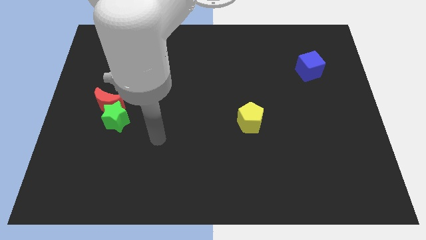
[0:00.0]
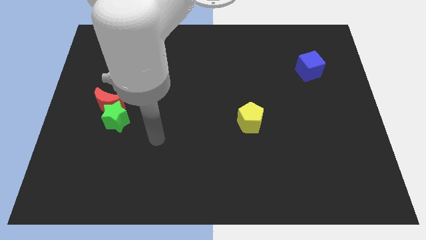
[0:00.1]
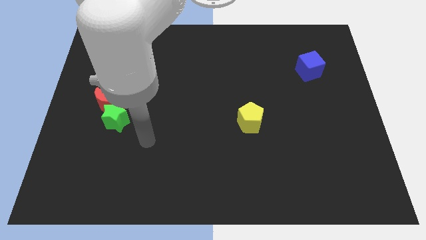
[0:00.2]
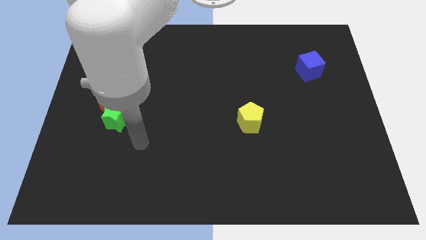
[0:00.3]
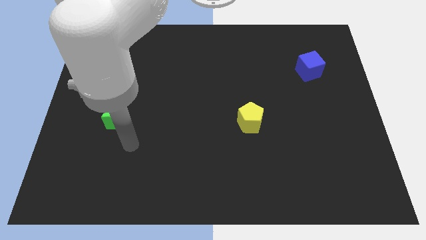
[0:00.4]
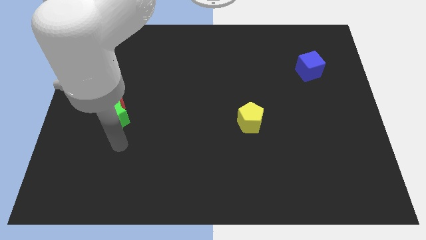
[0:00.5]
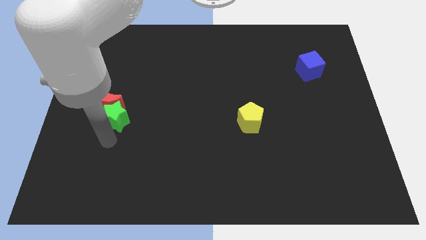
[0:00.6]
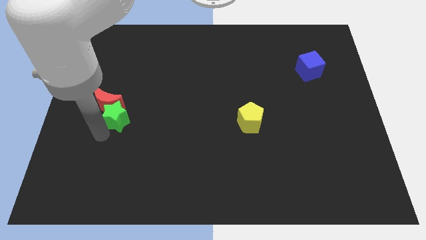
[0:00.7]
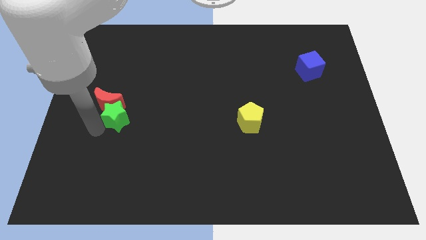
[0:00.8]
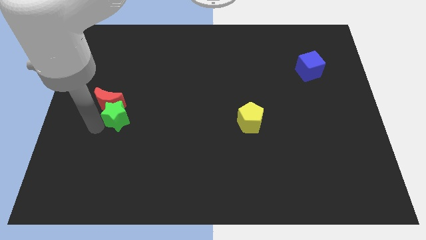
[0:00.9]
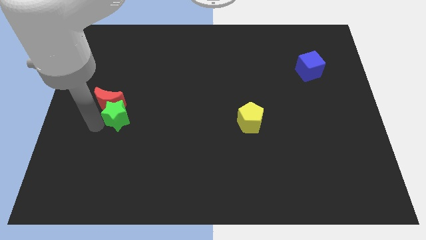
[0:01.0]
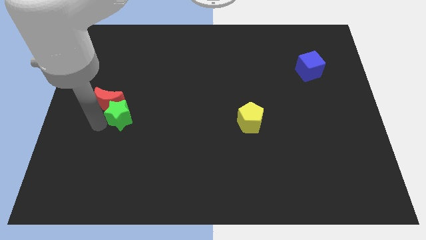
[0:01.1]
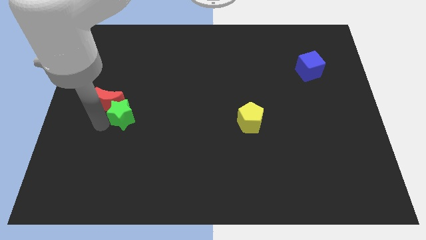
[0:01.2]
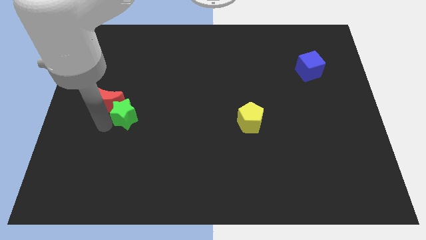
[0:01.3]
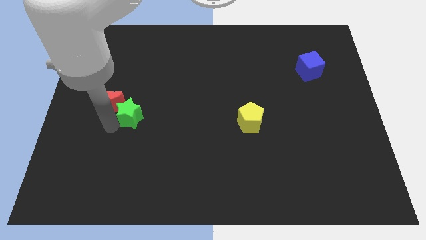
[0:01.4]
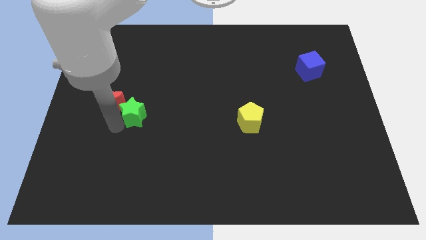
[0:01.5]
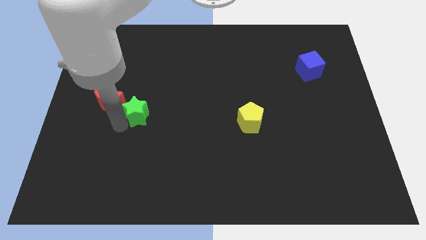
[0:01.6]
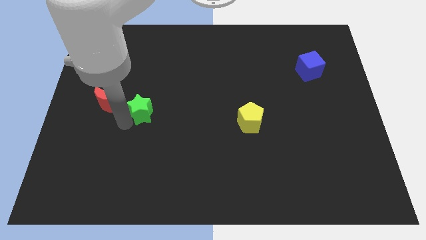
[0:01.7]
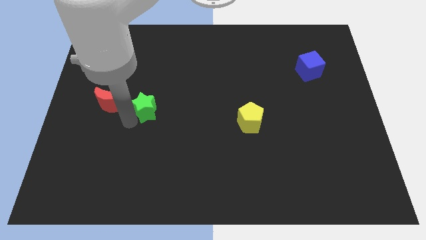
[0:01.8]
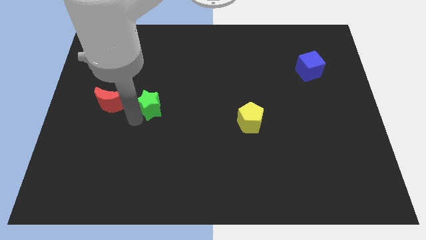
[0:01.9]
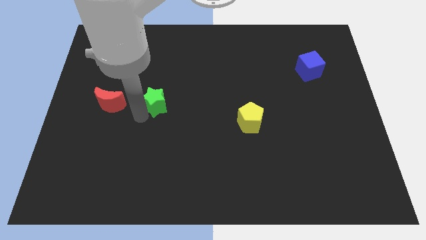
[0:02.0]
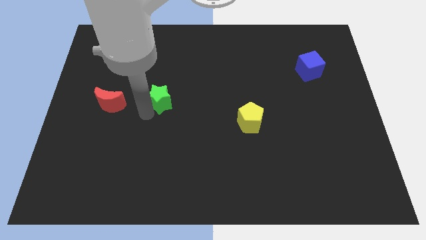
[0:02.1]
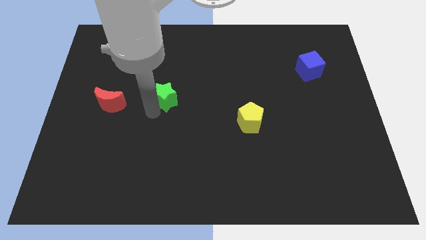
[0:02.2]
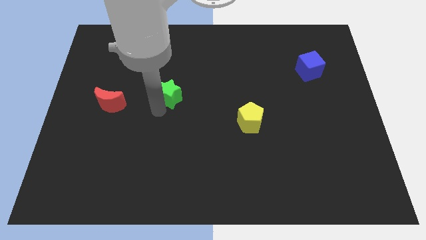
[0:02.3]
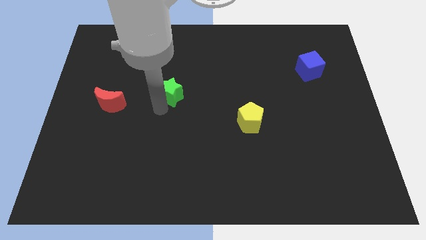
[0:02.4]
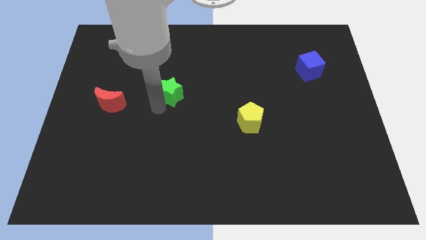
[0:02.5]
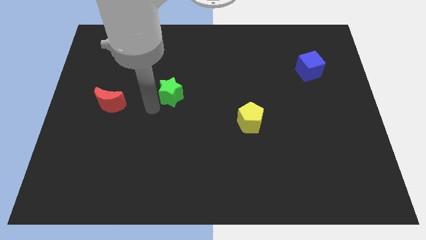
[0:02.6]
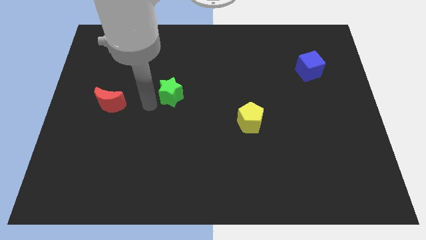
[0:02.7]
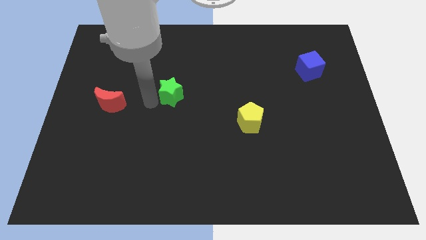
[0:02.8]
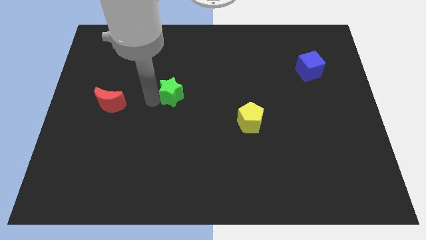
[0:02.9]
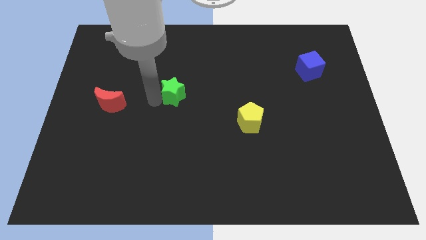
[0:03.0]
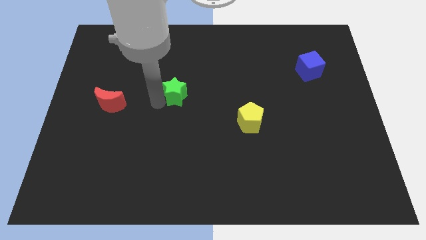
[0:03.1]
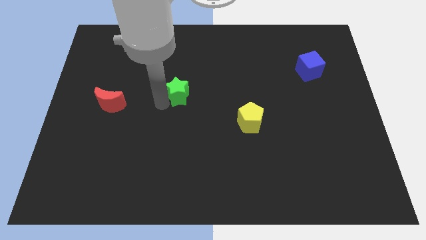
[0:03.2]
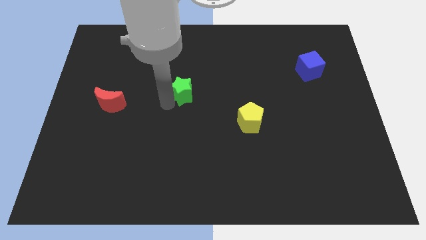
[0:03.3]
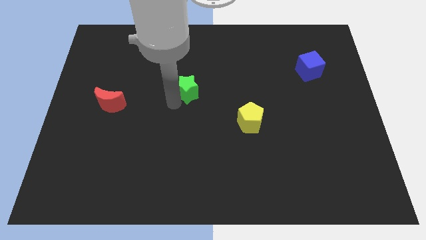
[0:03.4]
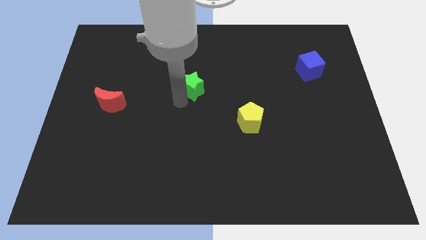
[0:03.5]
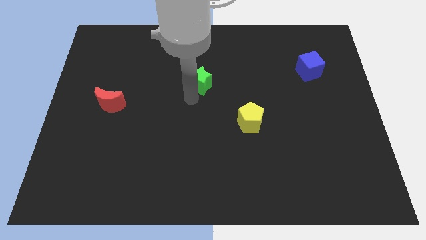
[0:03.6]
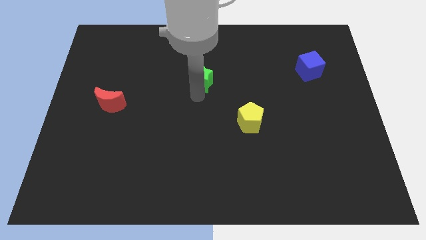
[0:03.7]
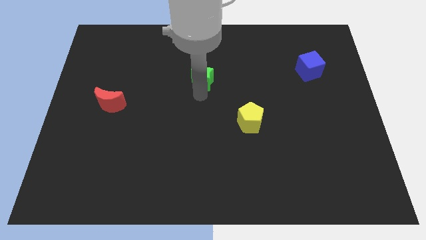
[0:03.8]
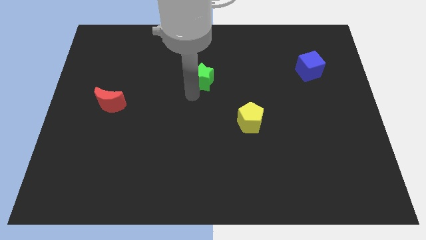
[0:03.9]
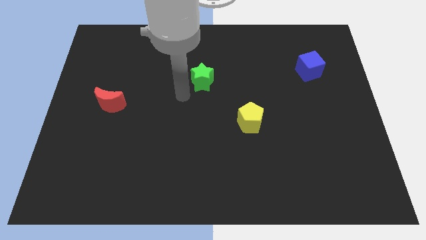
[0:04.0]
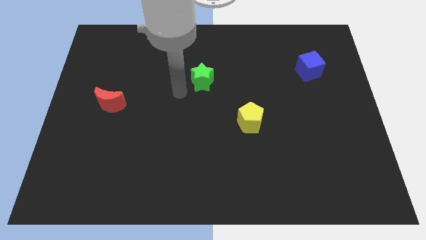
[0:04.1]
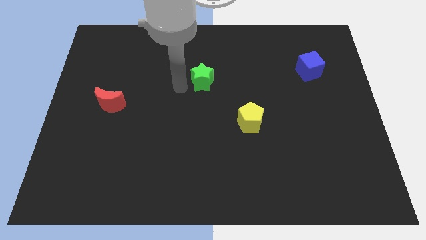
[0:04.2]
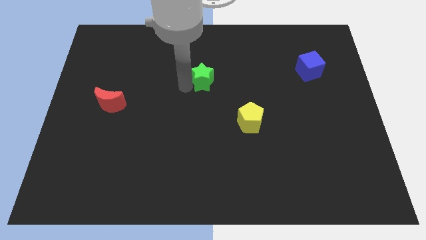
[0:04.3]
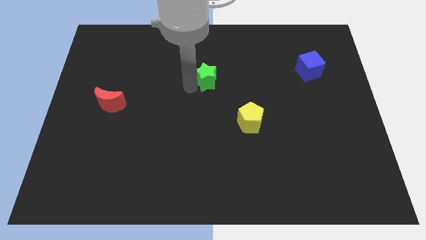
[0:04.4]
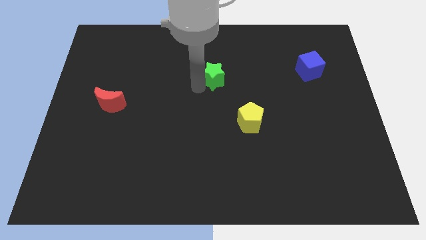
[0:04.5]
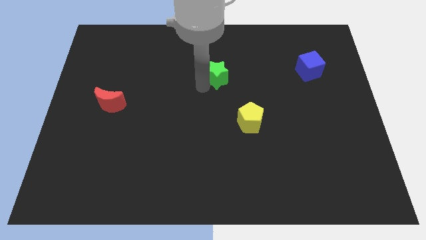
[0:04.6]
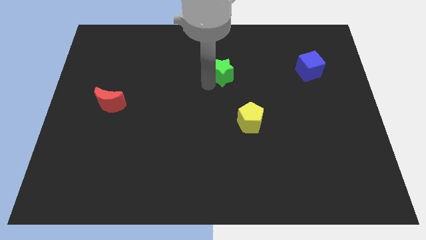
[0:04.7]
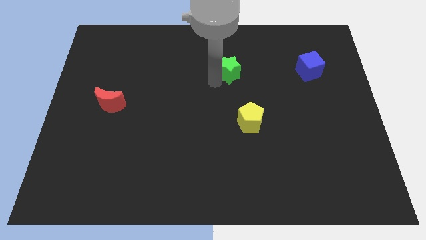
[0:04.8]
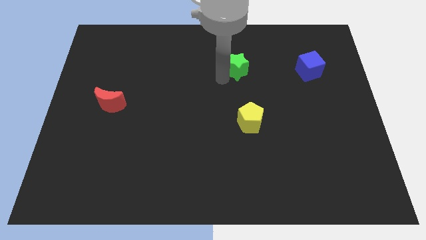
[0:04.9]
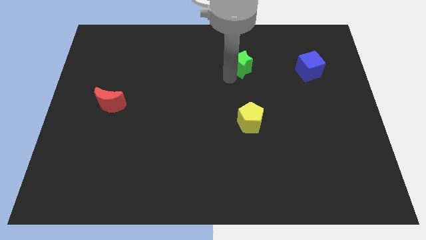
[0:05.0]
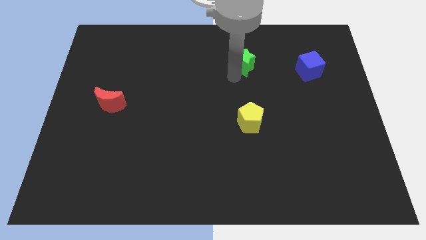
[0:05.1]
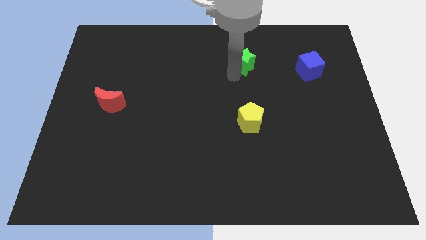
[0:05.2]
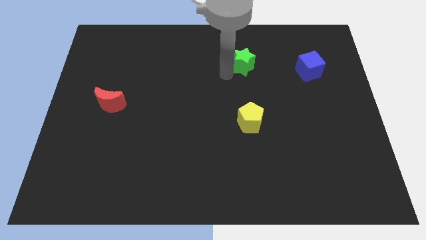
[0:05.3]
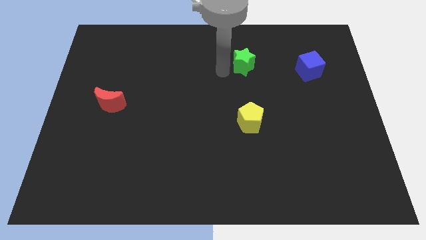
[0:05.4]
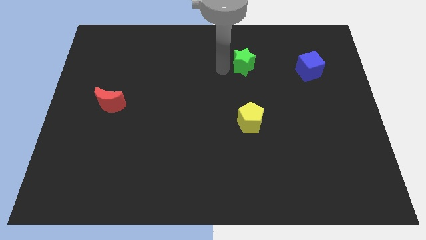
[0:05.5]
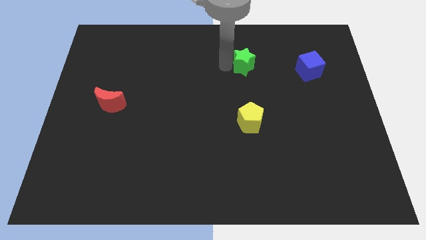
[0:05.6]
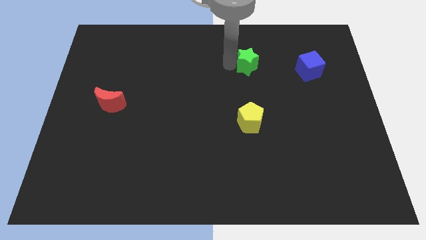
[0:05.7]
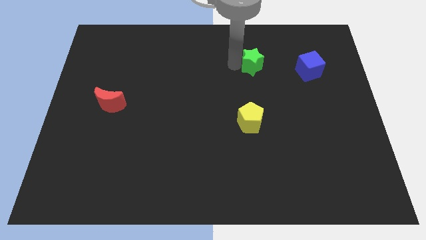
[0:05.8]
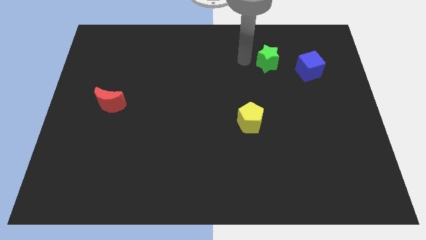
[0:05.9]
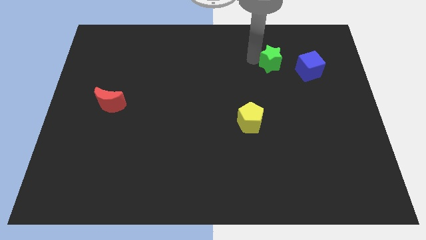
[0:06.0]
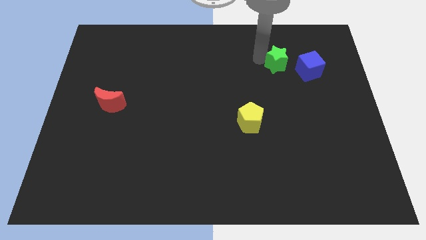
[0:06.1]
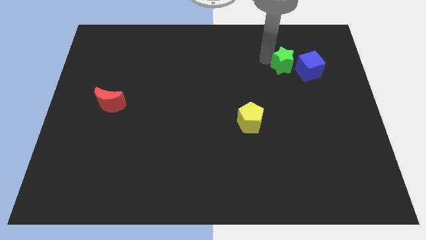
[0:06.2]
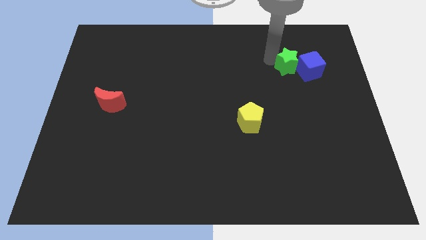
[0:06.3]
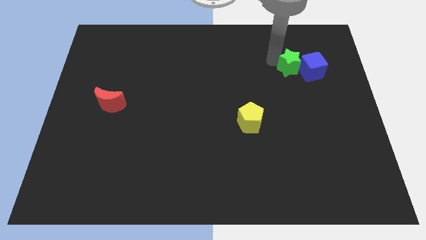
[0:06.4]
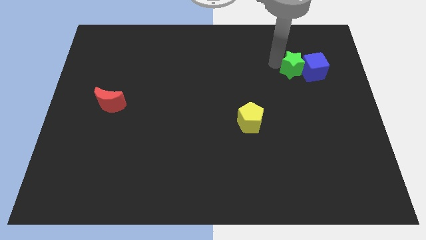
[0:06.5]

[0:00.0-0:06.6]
move the green star close to the blue block

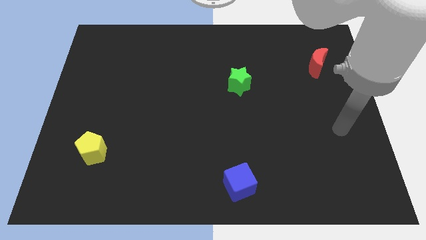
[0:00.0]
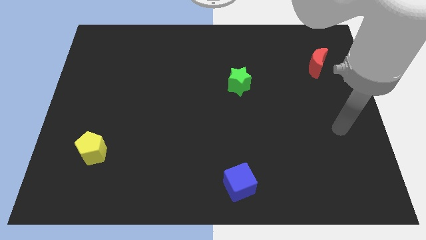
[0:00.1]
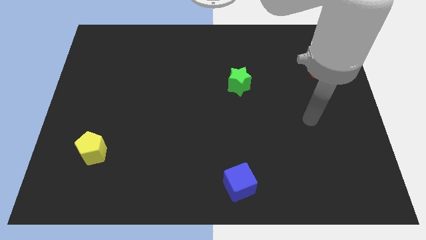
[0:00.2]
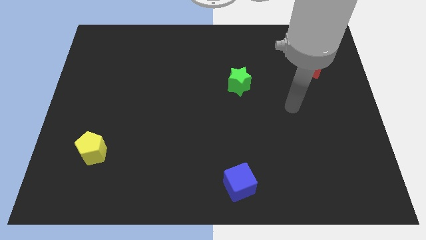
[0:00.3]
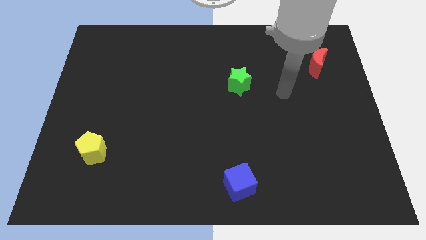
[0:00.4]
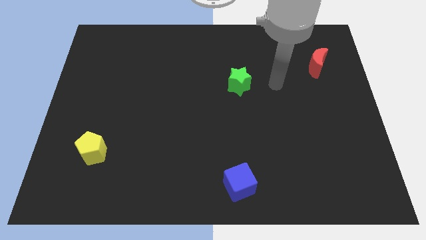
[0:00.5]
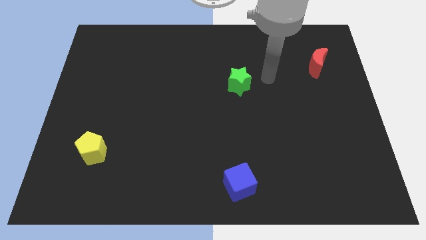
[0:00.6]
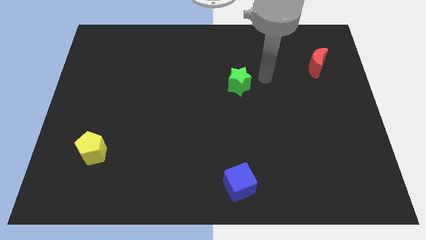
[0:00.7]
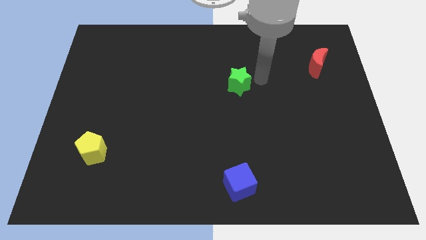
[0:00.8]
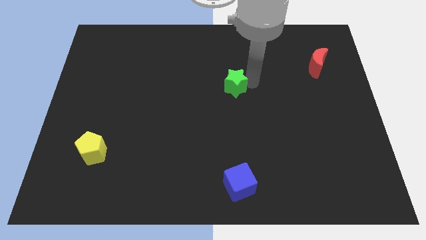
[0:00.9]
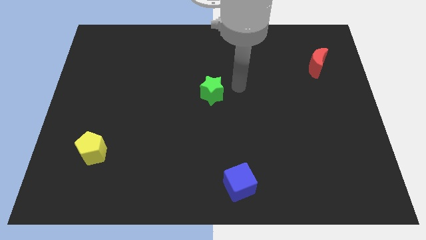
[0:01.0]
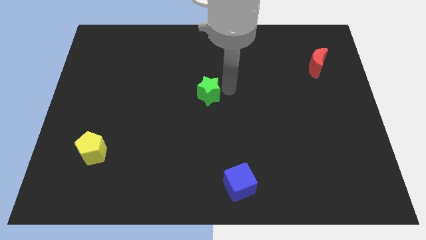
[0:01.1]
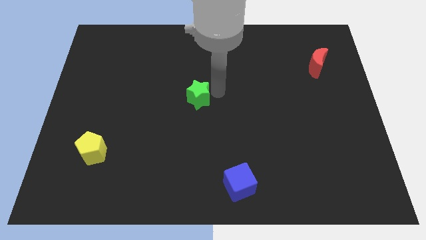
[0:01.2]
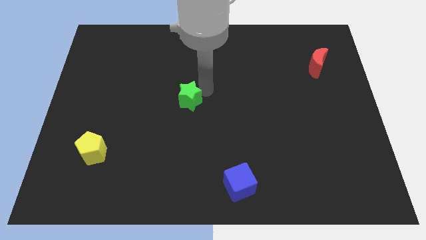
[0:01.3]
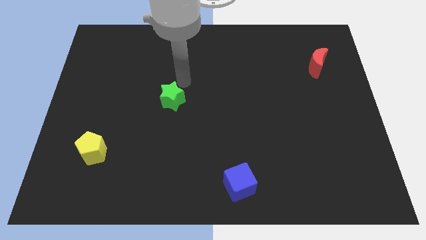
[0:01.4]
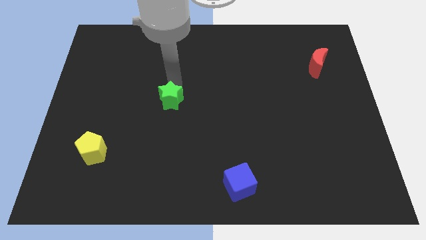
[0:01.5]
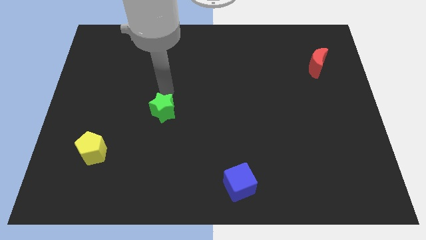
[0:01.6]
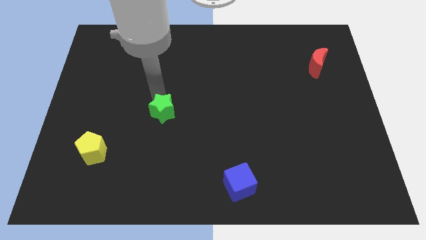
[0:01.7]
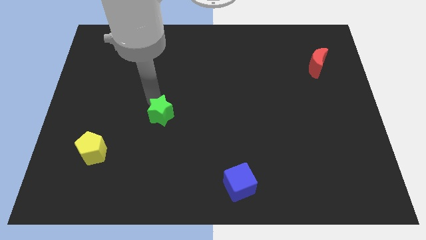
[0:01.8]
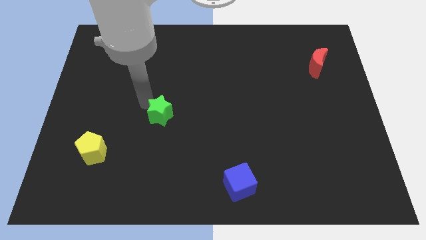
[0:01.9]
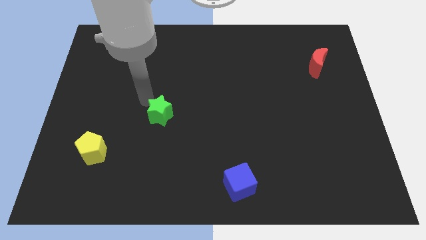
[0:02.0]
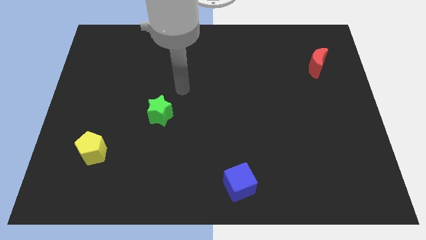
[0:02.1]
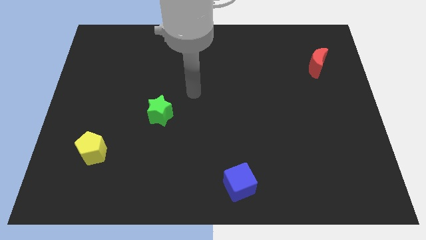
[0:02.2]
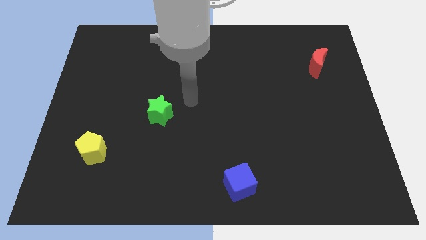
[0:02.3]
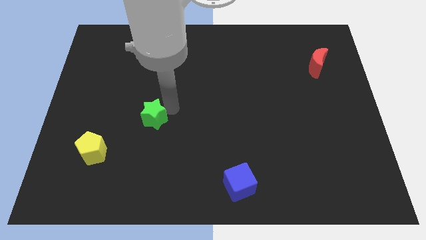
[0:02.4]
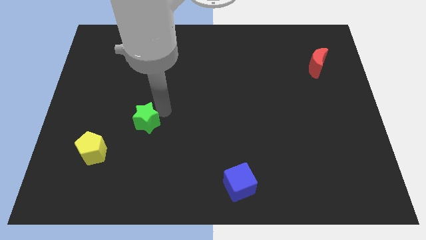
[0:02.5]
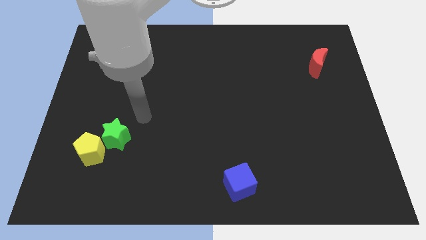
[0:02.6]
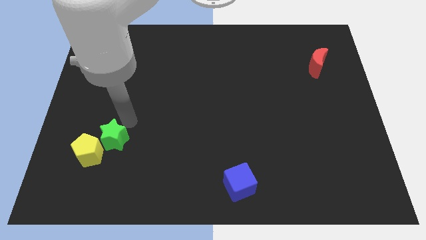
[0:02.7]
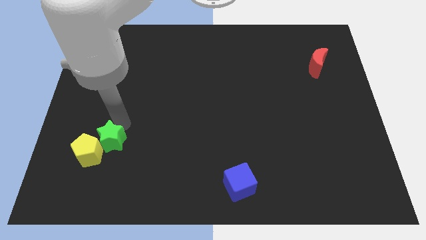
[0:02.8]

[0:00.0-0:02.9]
put the green block towards the yellow block
